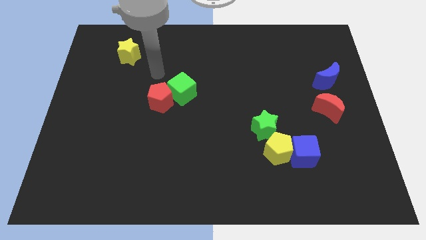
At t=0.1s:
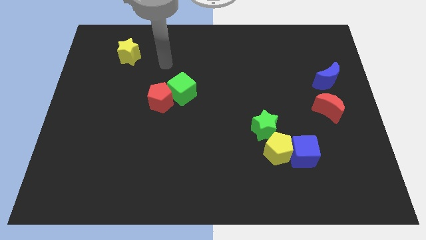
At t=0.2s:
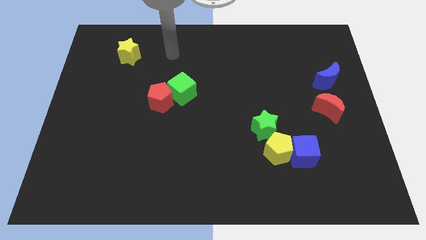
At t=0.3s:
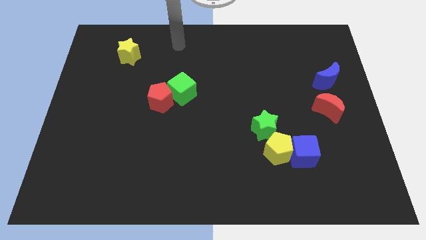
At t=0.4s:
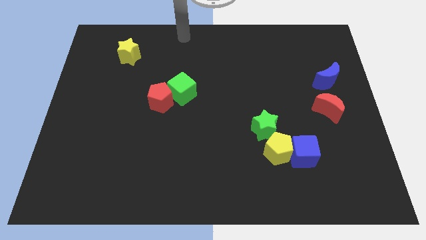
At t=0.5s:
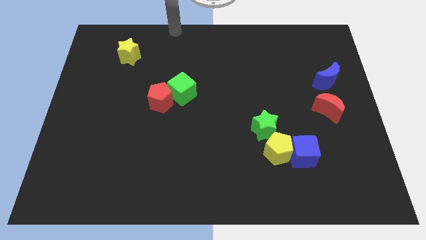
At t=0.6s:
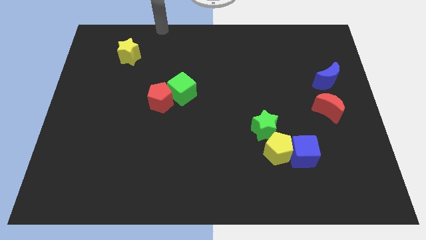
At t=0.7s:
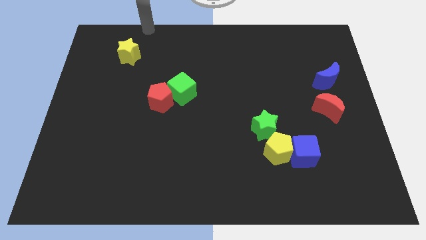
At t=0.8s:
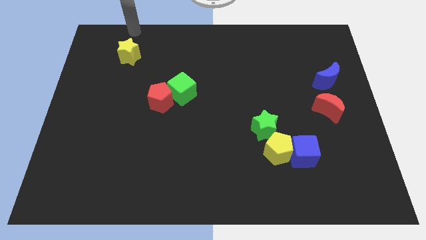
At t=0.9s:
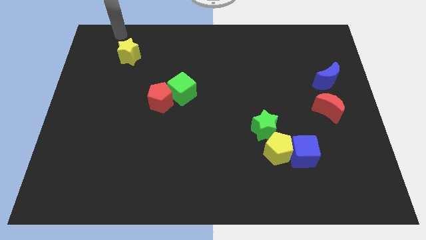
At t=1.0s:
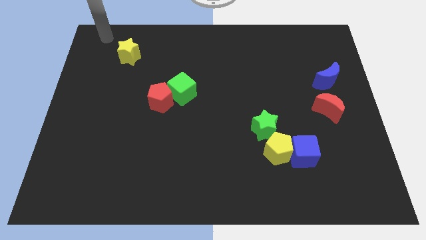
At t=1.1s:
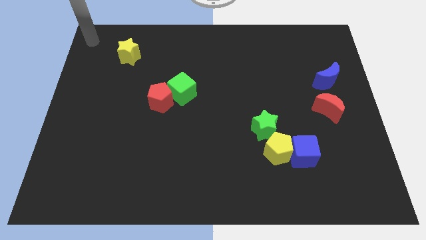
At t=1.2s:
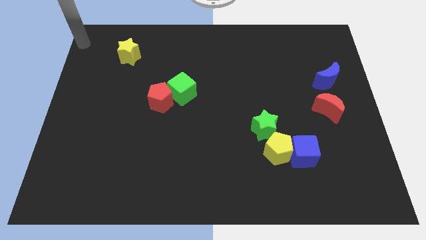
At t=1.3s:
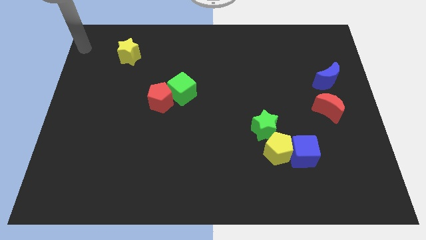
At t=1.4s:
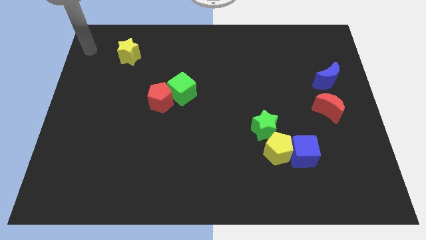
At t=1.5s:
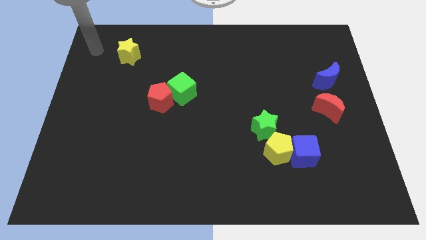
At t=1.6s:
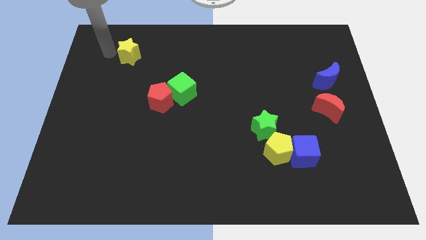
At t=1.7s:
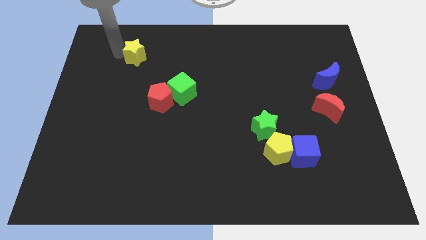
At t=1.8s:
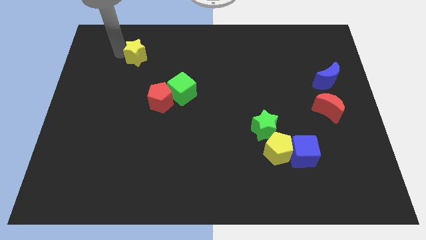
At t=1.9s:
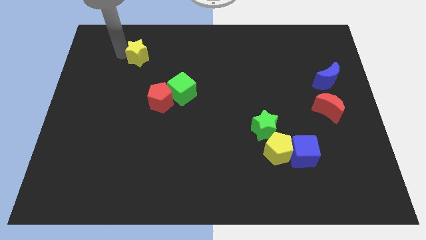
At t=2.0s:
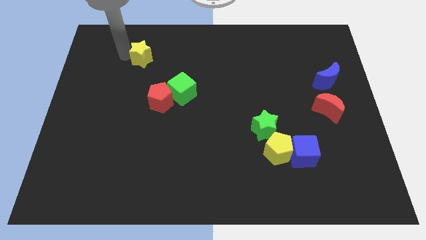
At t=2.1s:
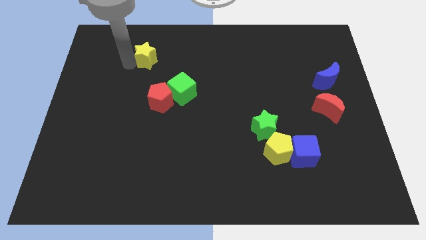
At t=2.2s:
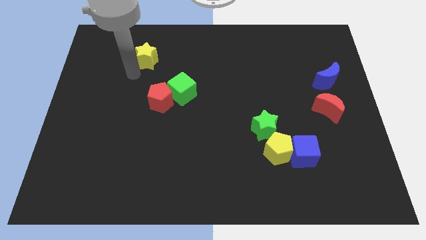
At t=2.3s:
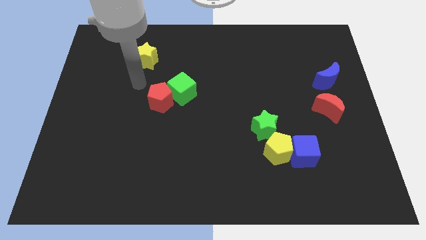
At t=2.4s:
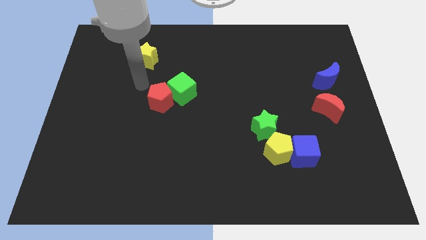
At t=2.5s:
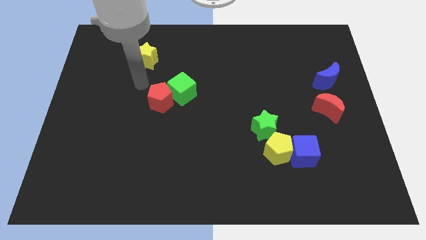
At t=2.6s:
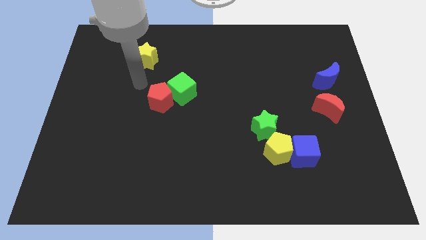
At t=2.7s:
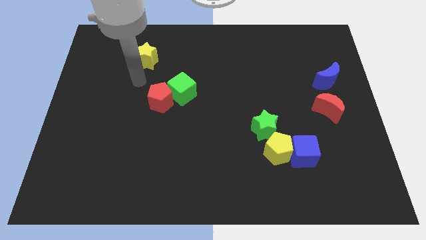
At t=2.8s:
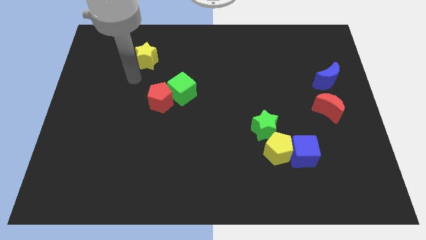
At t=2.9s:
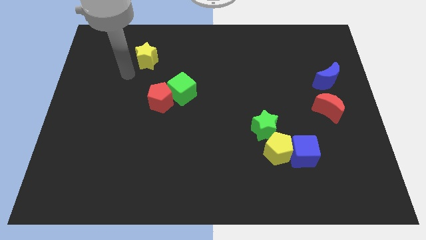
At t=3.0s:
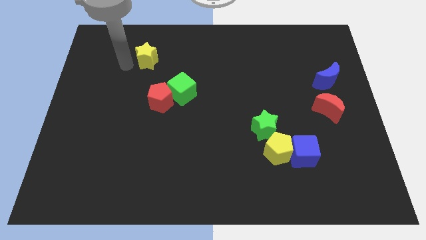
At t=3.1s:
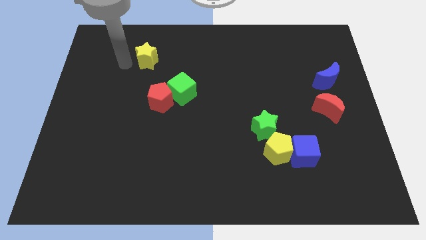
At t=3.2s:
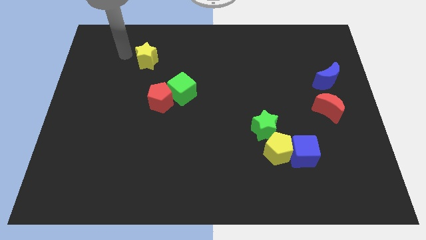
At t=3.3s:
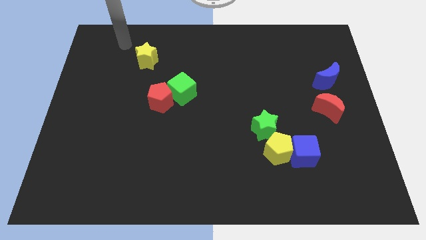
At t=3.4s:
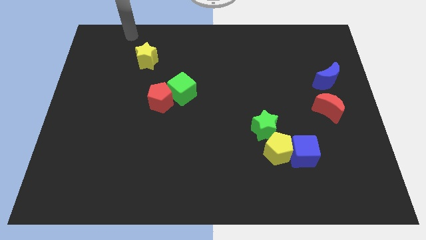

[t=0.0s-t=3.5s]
slightly push the yellow star towards the green cube

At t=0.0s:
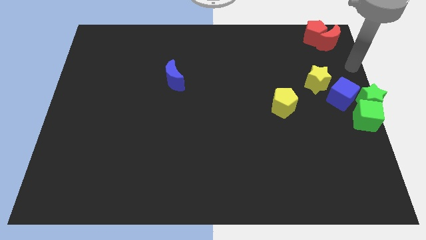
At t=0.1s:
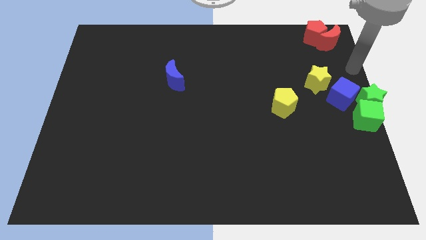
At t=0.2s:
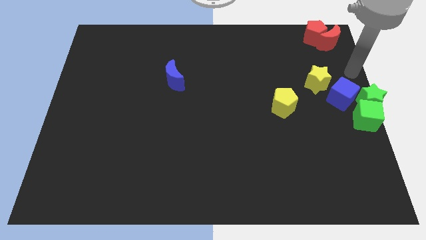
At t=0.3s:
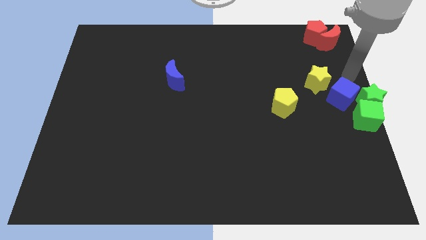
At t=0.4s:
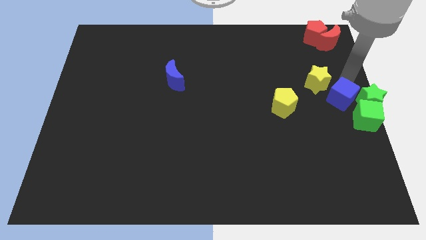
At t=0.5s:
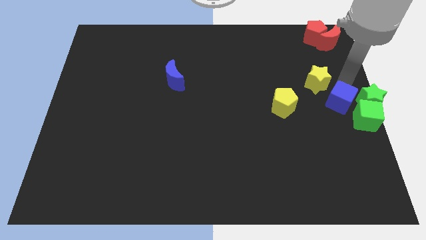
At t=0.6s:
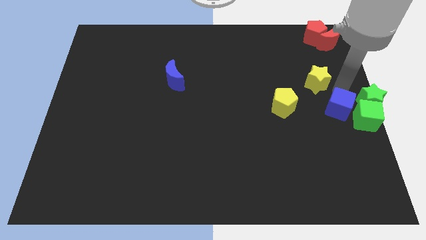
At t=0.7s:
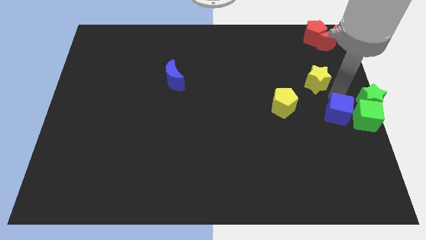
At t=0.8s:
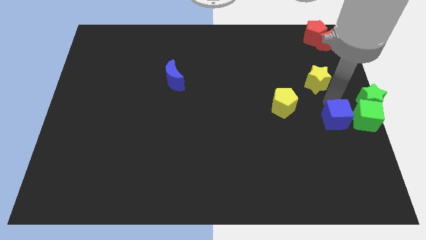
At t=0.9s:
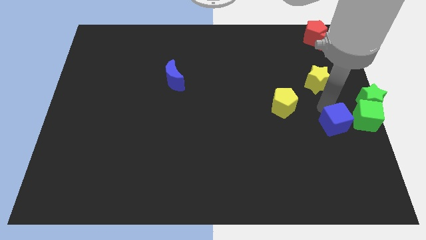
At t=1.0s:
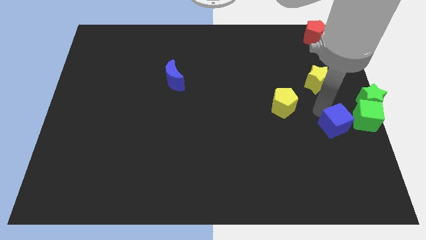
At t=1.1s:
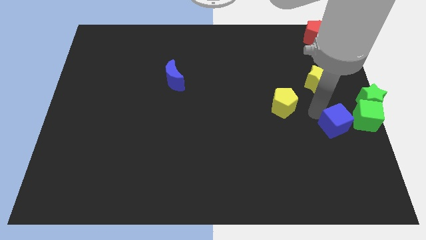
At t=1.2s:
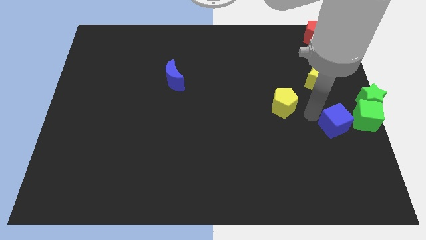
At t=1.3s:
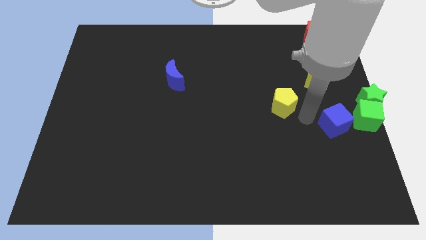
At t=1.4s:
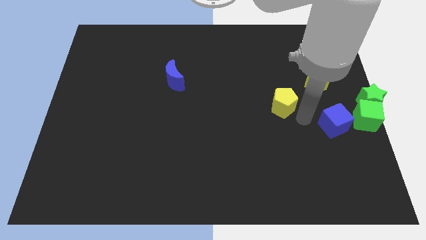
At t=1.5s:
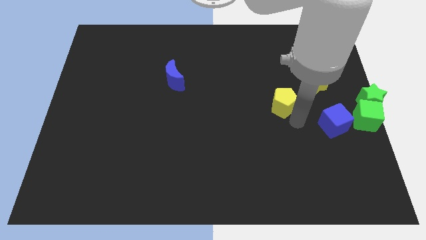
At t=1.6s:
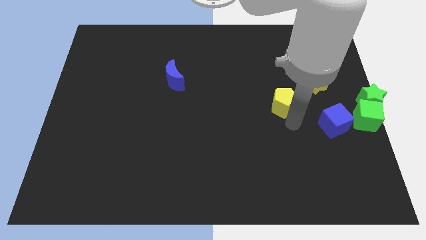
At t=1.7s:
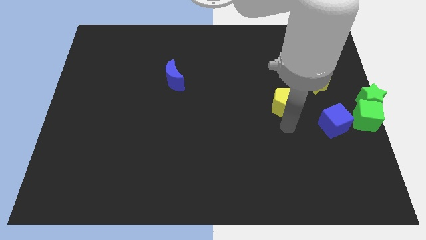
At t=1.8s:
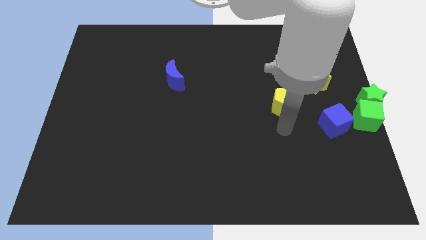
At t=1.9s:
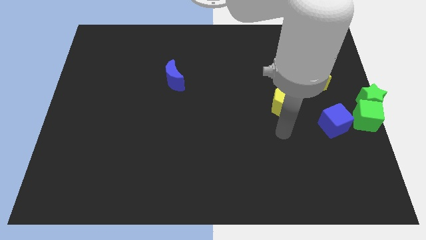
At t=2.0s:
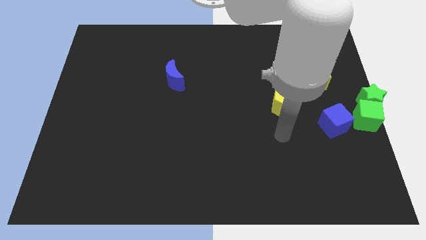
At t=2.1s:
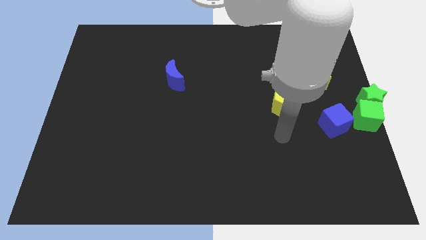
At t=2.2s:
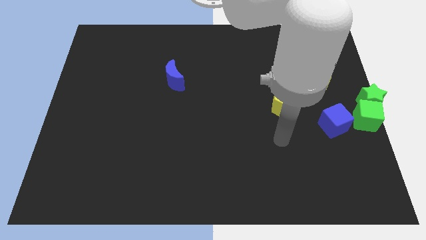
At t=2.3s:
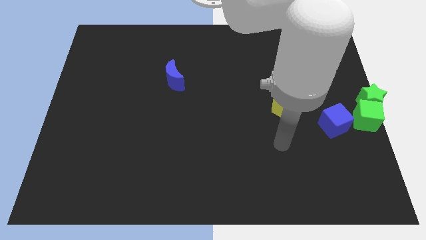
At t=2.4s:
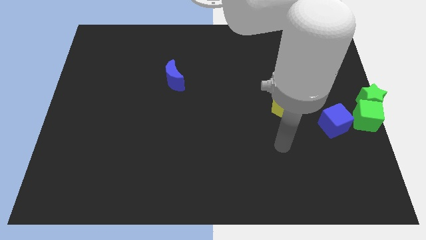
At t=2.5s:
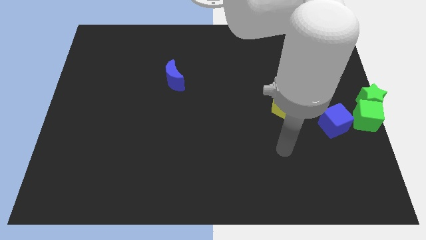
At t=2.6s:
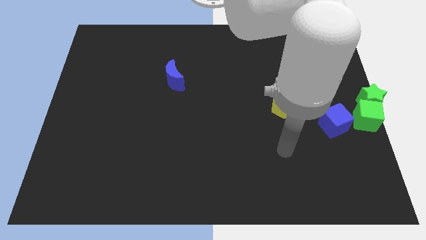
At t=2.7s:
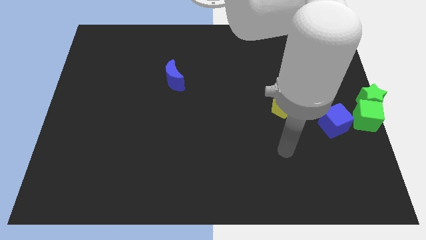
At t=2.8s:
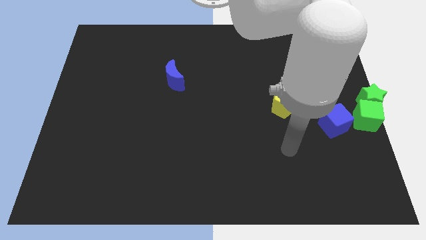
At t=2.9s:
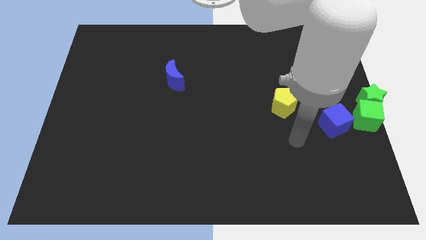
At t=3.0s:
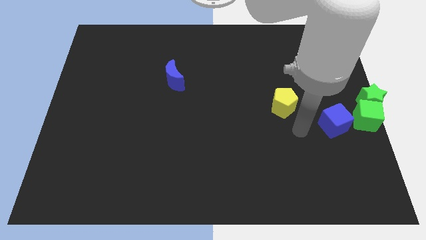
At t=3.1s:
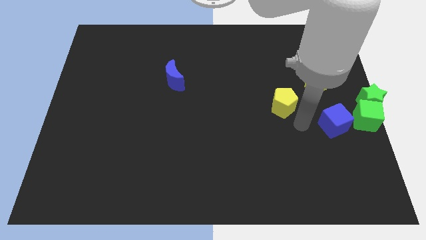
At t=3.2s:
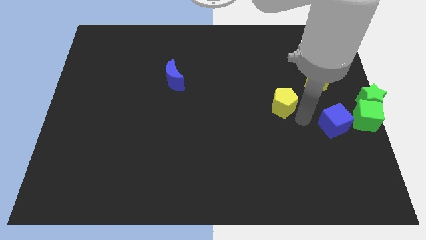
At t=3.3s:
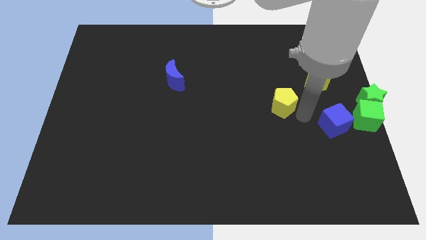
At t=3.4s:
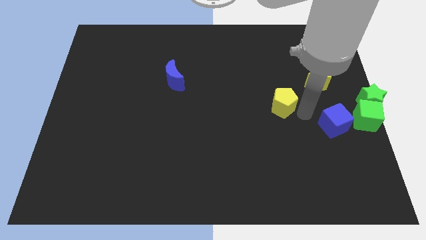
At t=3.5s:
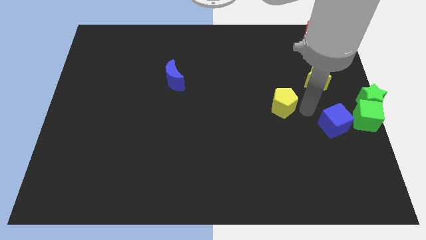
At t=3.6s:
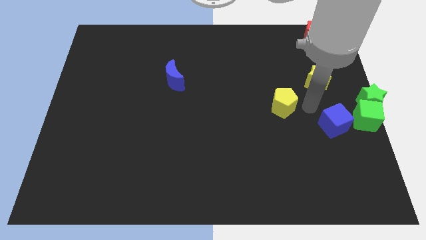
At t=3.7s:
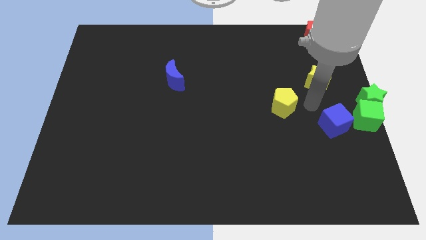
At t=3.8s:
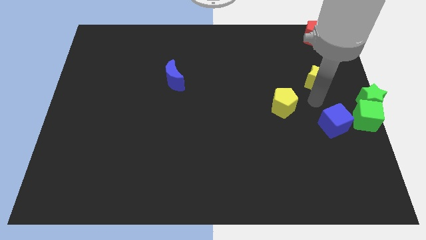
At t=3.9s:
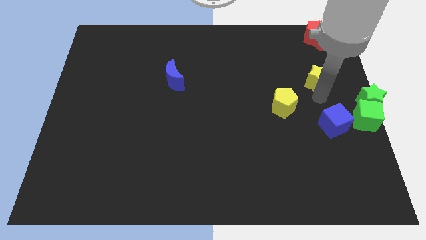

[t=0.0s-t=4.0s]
push the blue cube slightly downwards

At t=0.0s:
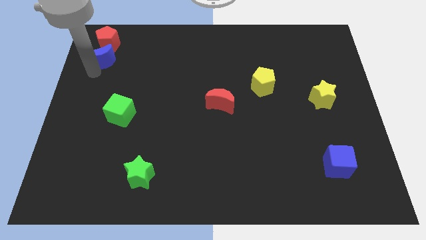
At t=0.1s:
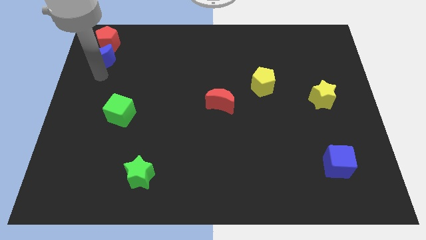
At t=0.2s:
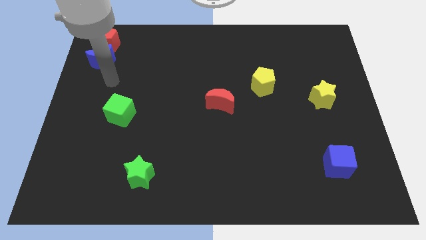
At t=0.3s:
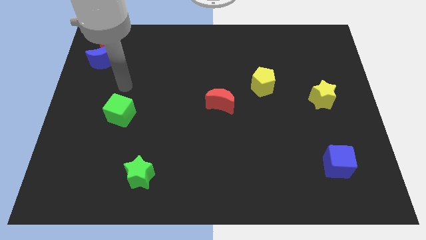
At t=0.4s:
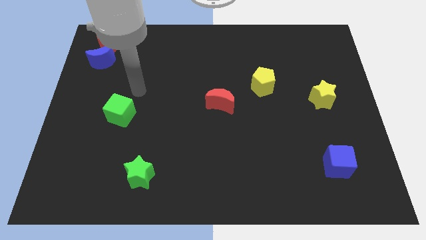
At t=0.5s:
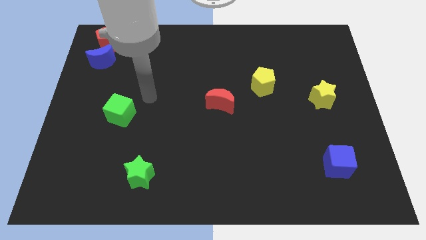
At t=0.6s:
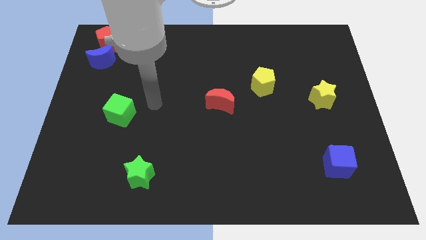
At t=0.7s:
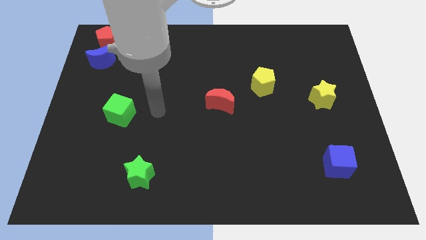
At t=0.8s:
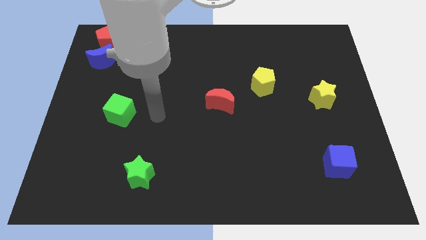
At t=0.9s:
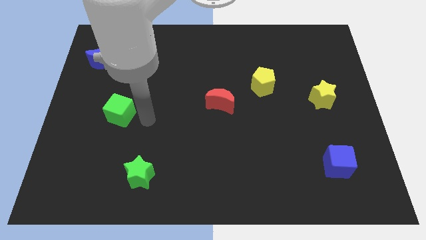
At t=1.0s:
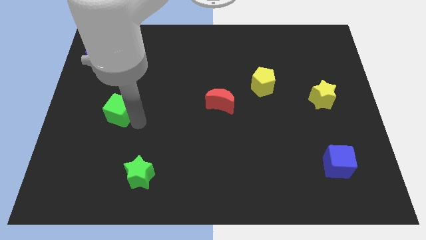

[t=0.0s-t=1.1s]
move your arm away from blue crescent

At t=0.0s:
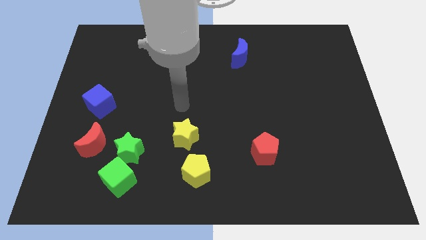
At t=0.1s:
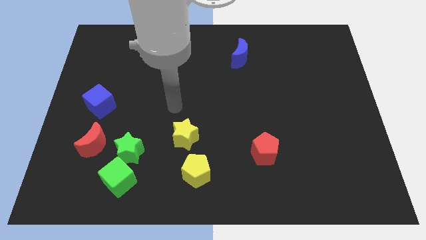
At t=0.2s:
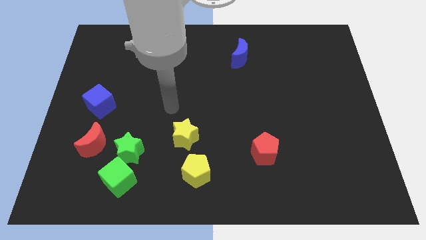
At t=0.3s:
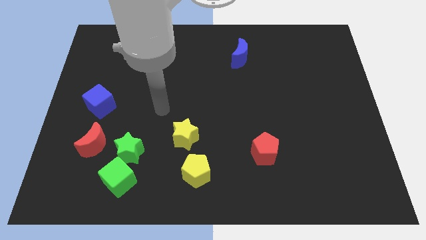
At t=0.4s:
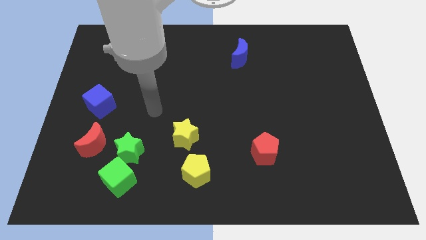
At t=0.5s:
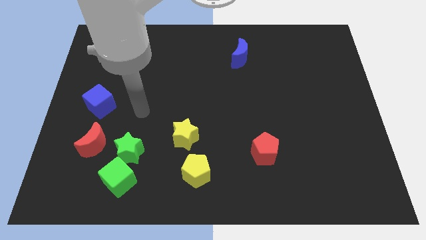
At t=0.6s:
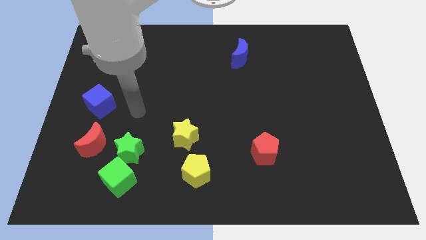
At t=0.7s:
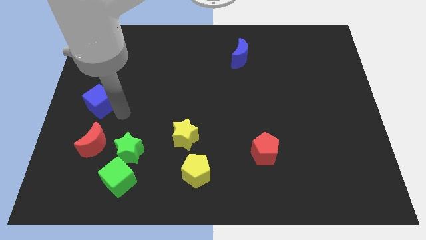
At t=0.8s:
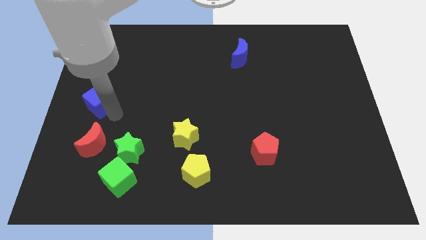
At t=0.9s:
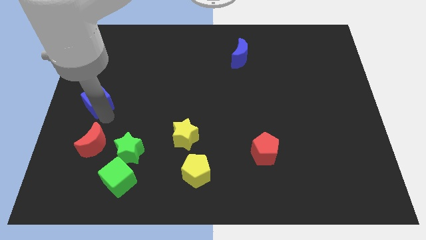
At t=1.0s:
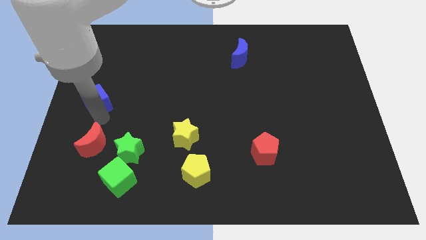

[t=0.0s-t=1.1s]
place your arm at the top of the red crescent
